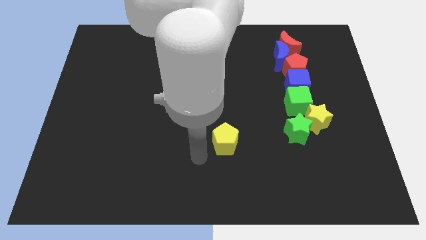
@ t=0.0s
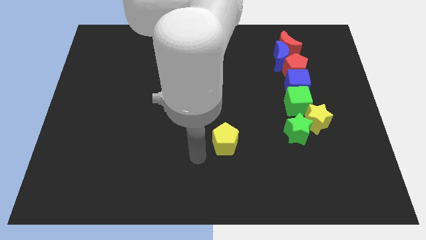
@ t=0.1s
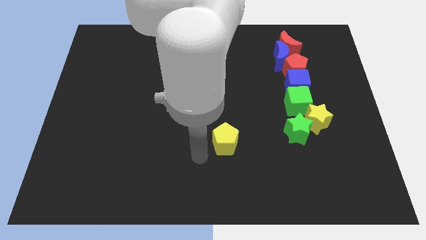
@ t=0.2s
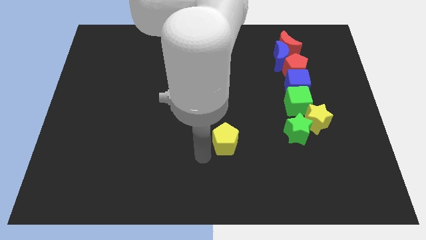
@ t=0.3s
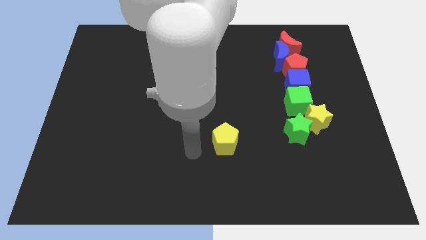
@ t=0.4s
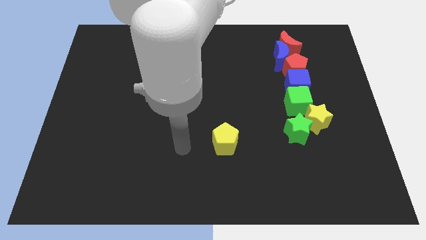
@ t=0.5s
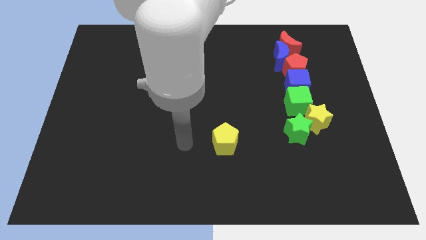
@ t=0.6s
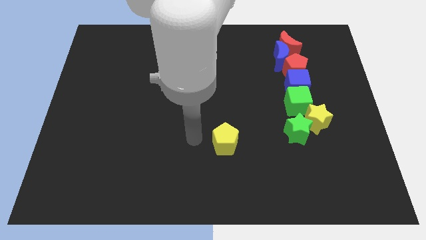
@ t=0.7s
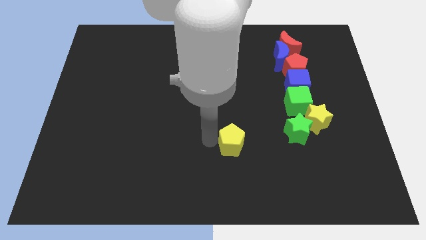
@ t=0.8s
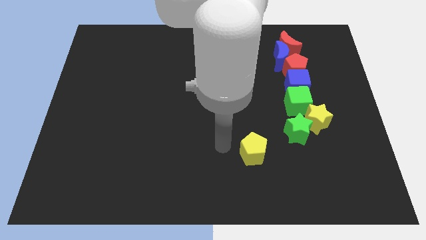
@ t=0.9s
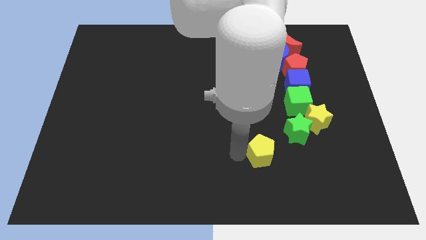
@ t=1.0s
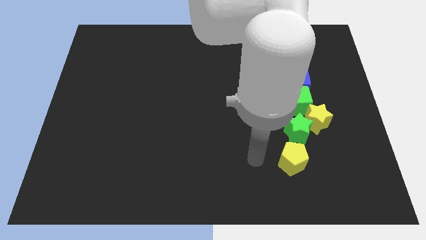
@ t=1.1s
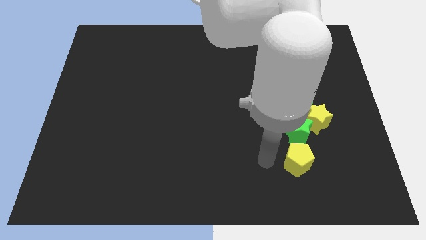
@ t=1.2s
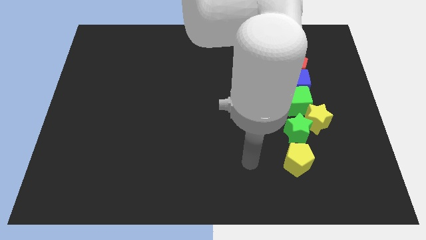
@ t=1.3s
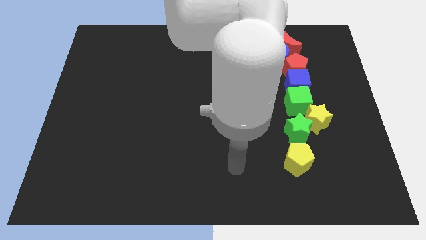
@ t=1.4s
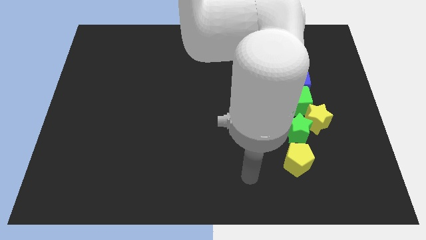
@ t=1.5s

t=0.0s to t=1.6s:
push the yellow pentagon to the bottom of the green star

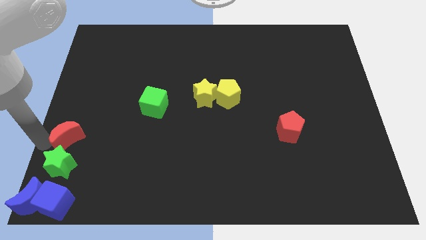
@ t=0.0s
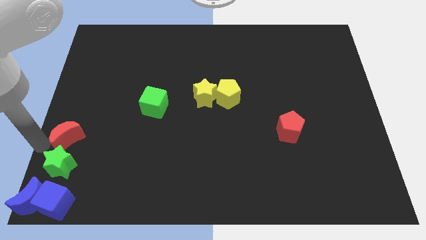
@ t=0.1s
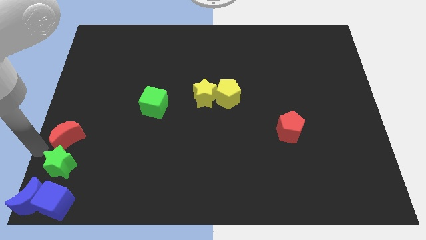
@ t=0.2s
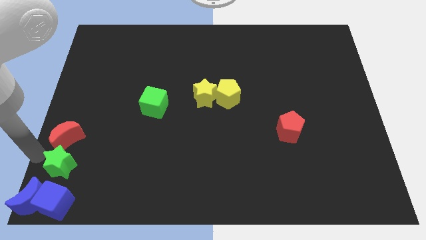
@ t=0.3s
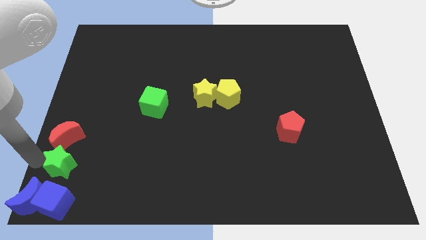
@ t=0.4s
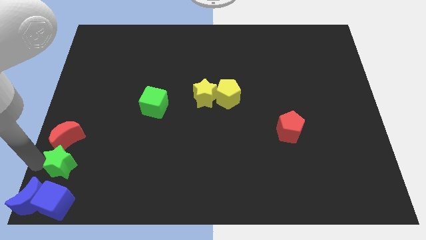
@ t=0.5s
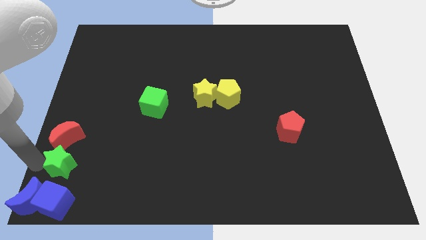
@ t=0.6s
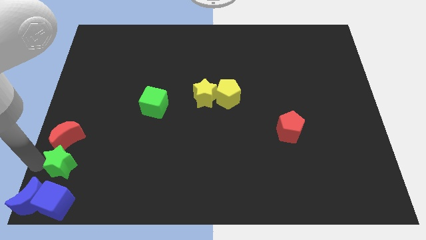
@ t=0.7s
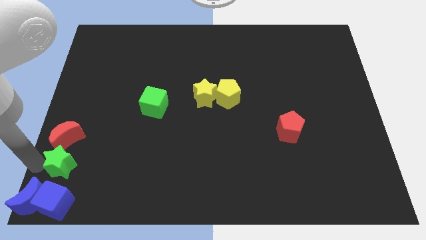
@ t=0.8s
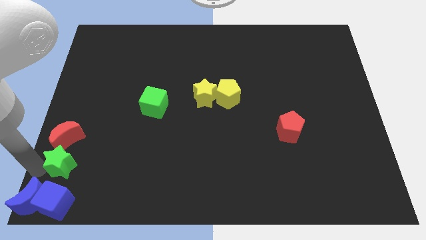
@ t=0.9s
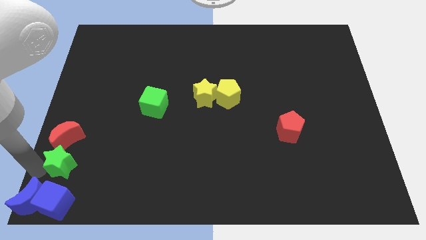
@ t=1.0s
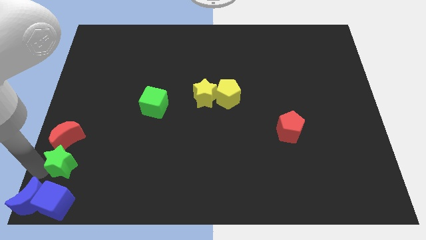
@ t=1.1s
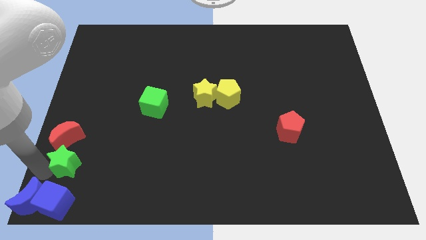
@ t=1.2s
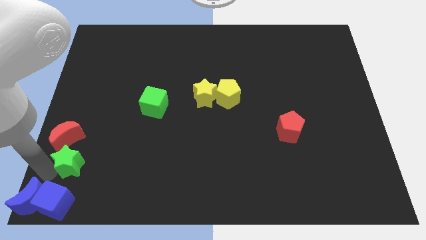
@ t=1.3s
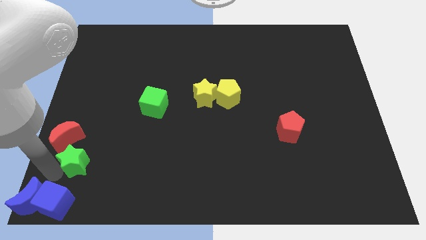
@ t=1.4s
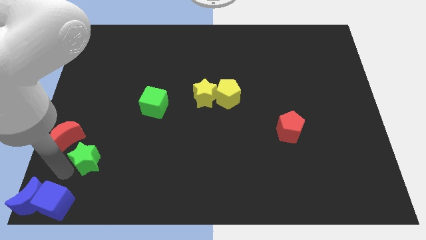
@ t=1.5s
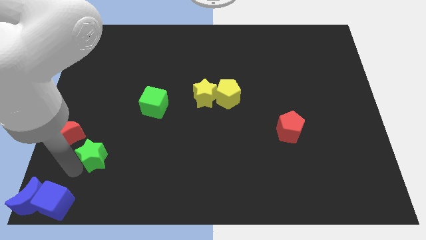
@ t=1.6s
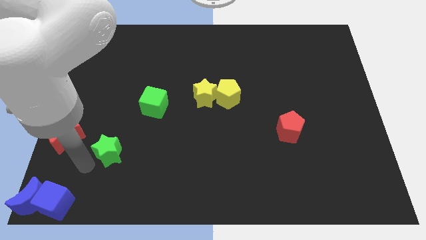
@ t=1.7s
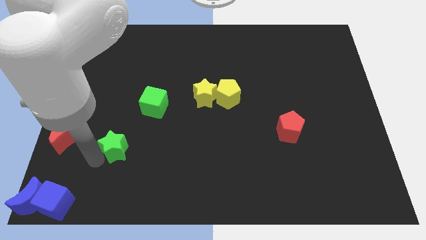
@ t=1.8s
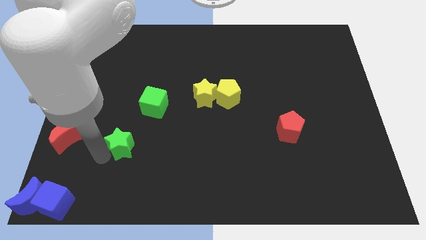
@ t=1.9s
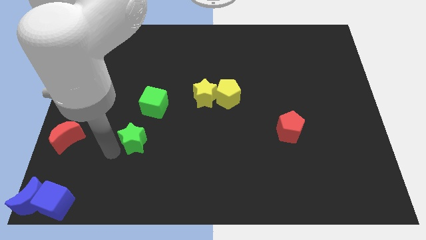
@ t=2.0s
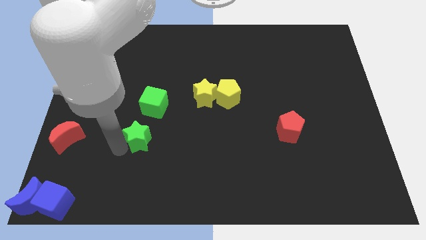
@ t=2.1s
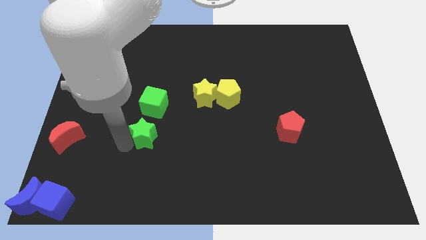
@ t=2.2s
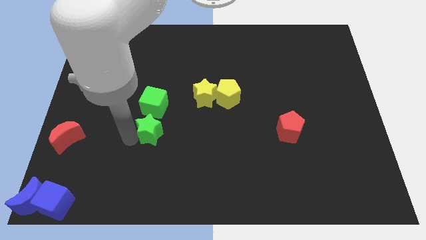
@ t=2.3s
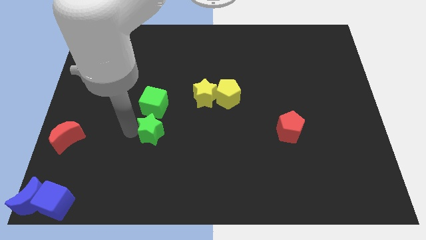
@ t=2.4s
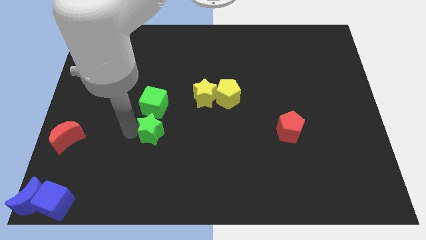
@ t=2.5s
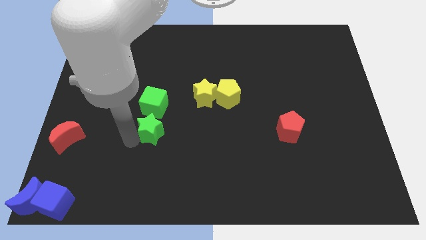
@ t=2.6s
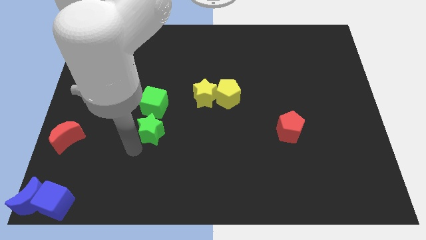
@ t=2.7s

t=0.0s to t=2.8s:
move the green star below the green cube

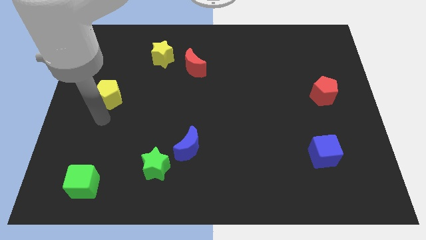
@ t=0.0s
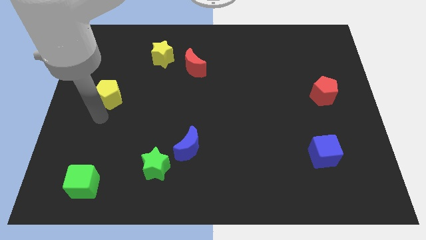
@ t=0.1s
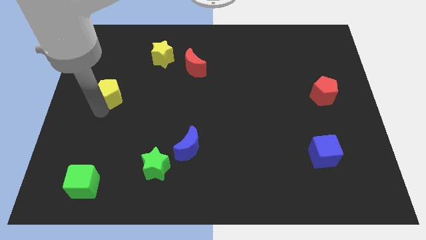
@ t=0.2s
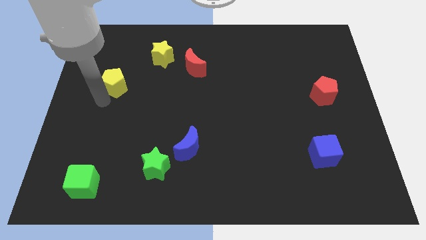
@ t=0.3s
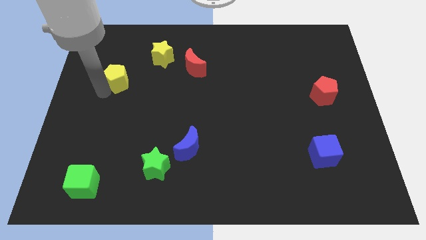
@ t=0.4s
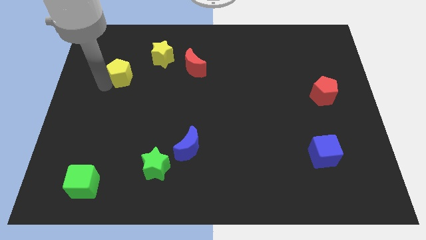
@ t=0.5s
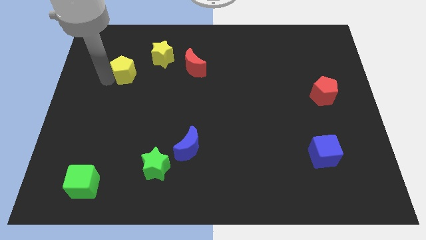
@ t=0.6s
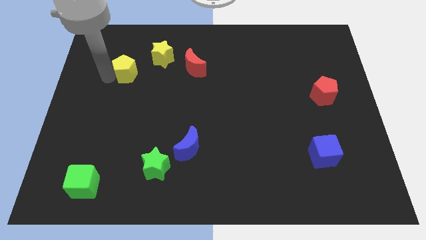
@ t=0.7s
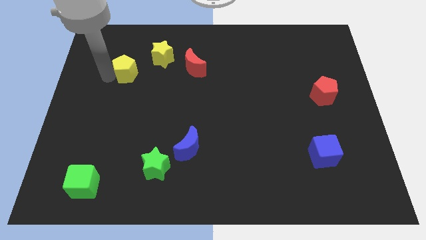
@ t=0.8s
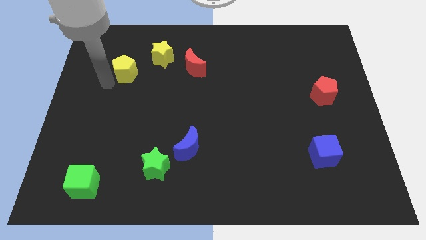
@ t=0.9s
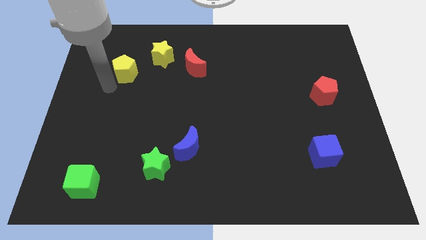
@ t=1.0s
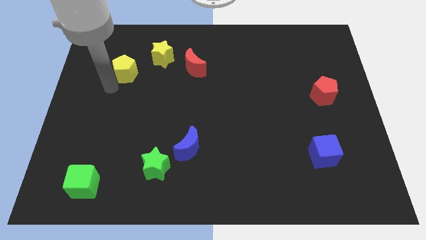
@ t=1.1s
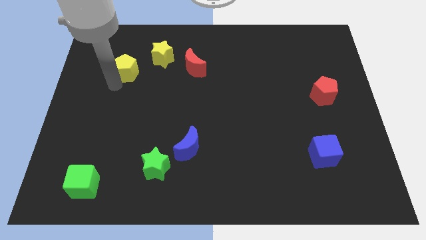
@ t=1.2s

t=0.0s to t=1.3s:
move yellow pentagon bottom left of the yellow star

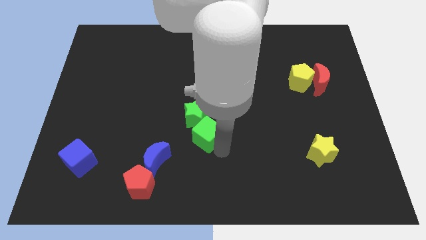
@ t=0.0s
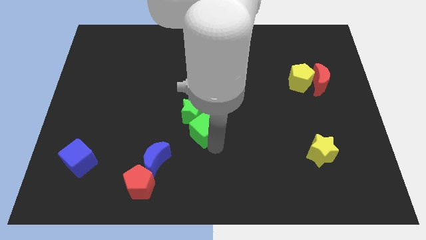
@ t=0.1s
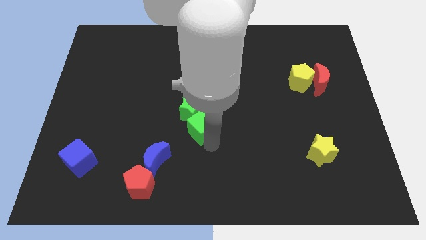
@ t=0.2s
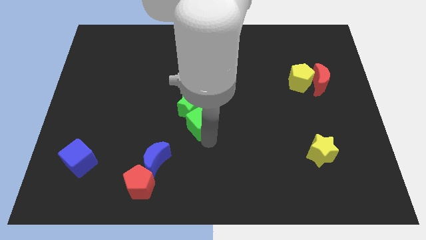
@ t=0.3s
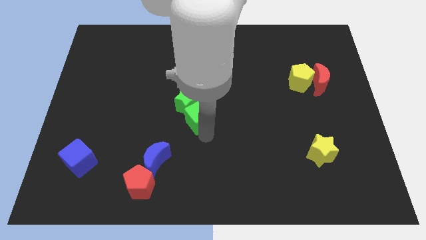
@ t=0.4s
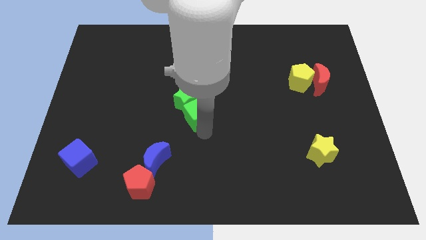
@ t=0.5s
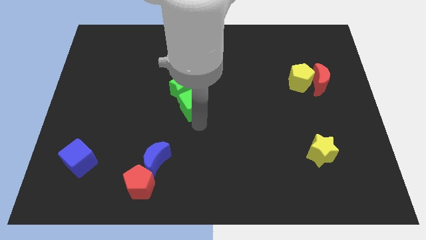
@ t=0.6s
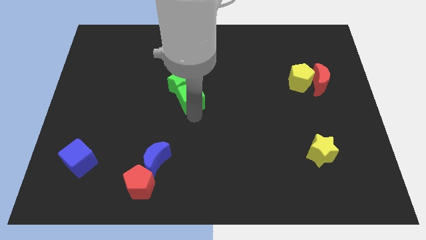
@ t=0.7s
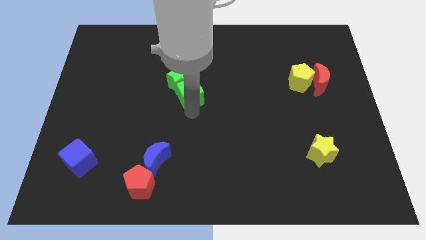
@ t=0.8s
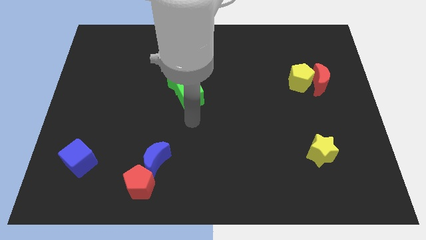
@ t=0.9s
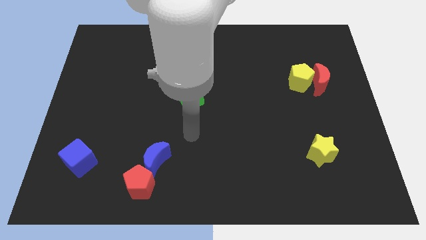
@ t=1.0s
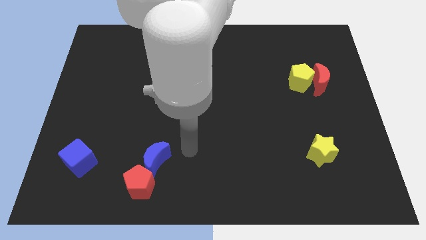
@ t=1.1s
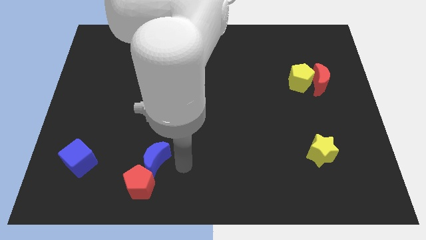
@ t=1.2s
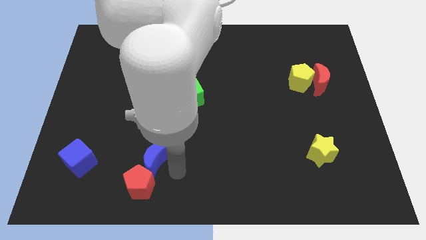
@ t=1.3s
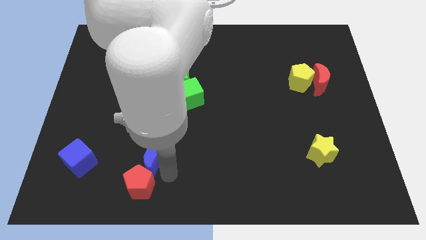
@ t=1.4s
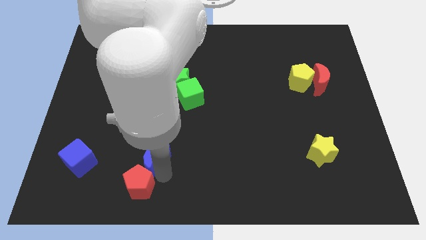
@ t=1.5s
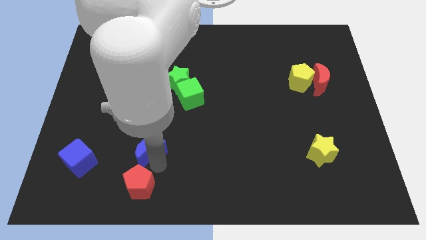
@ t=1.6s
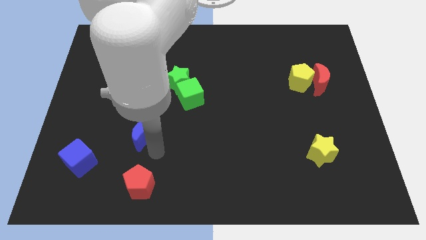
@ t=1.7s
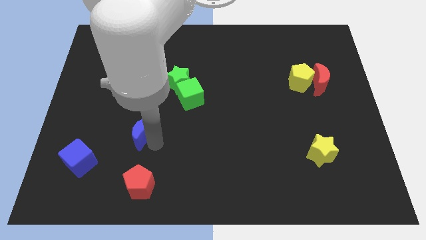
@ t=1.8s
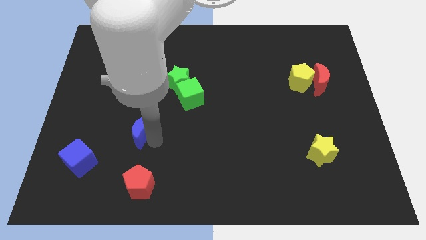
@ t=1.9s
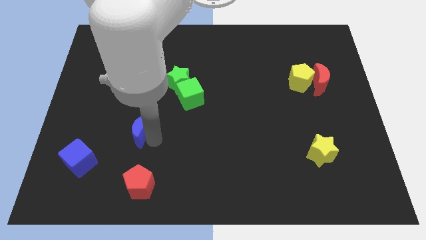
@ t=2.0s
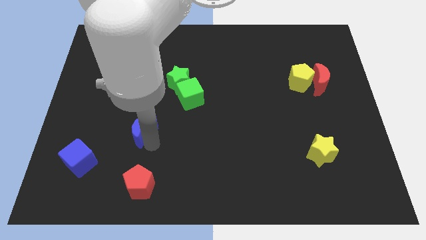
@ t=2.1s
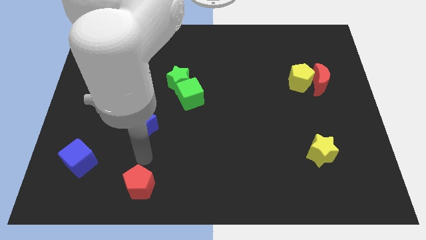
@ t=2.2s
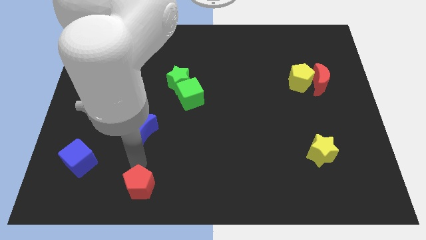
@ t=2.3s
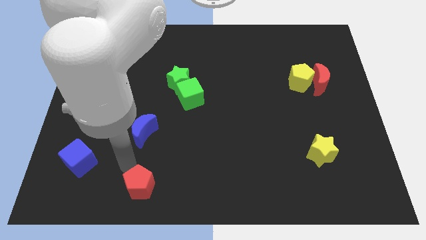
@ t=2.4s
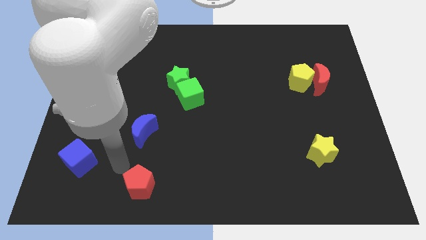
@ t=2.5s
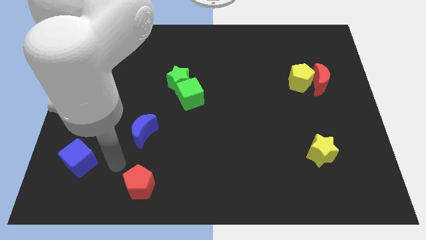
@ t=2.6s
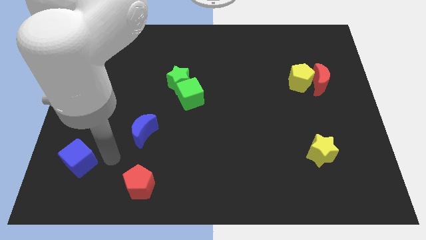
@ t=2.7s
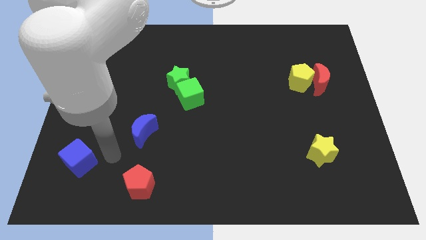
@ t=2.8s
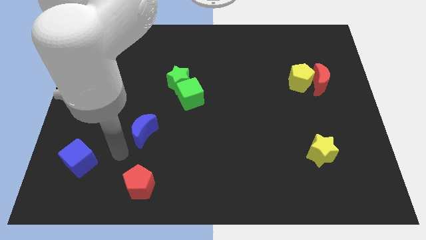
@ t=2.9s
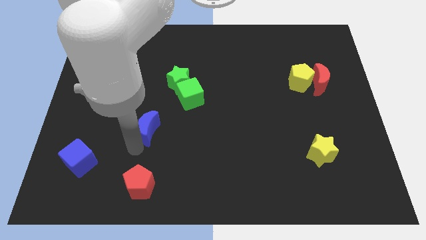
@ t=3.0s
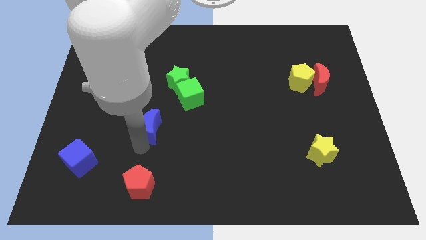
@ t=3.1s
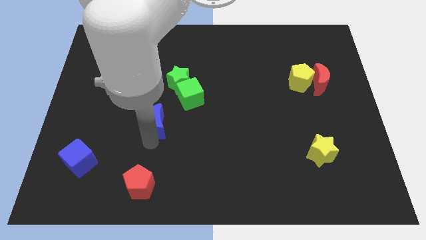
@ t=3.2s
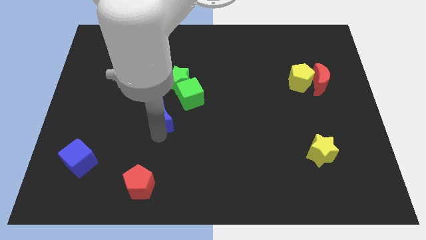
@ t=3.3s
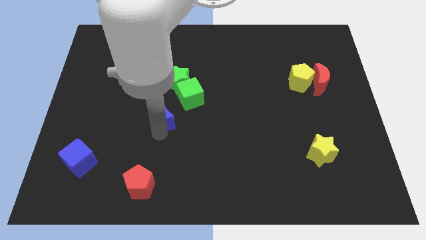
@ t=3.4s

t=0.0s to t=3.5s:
move the blue moon away from the red pentagon
